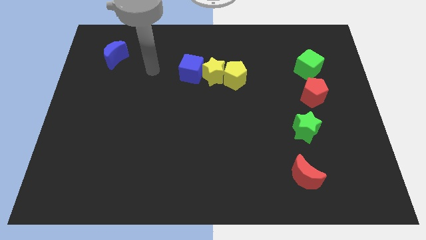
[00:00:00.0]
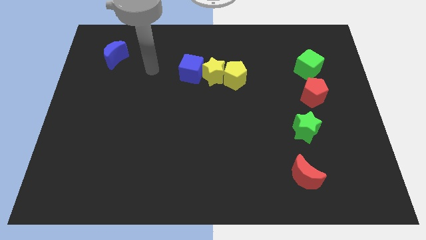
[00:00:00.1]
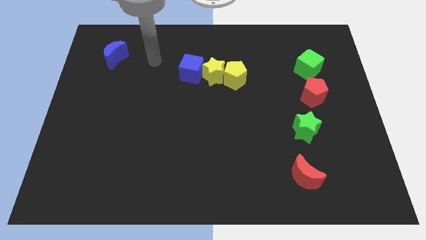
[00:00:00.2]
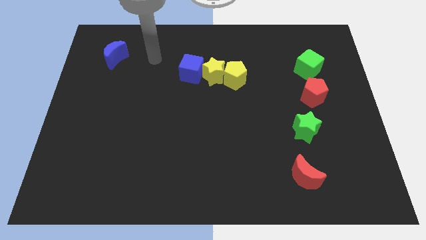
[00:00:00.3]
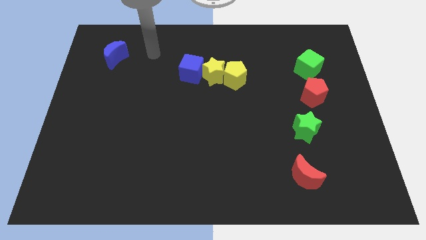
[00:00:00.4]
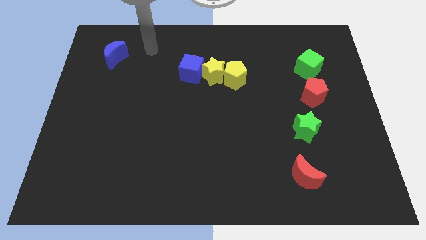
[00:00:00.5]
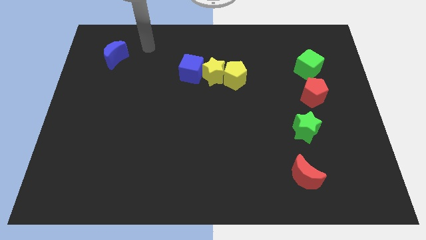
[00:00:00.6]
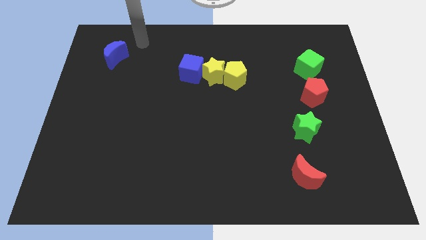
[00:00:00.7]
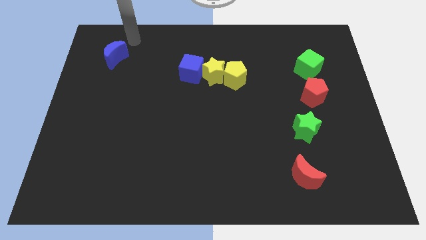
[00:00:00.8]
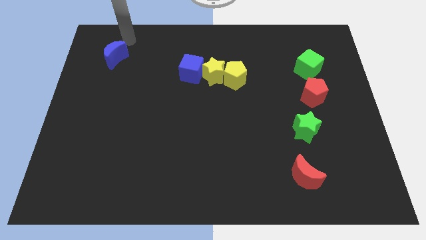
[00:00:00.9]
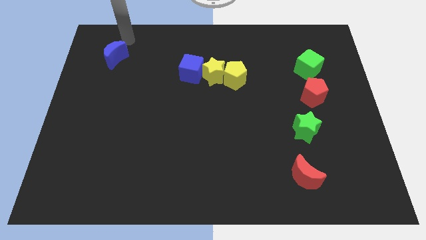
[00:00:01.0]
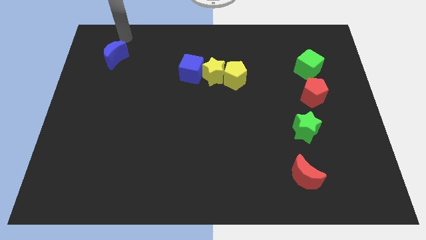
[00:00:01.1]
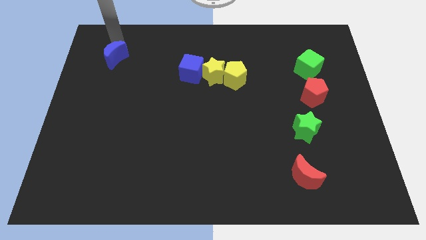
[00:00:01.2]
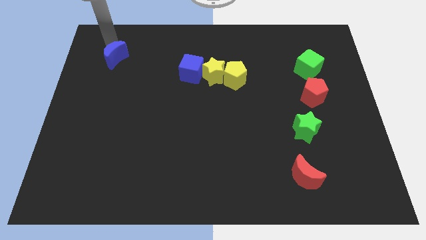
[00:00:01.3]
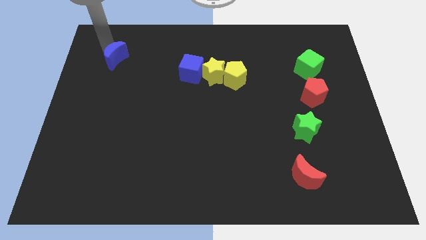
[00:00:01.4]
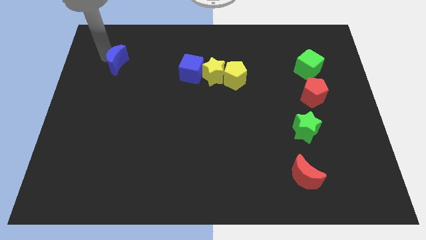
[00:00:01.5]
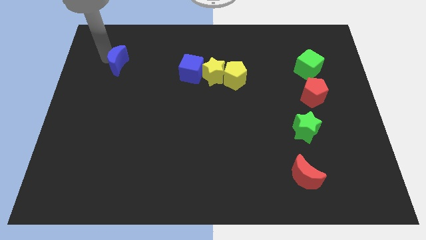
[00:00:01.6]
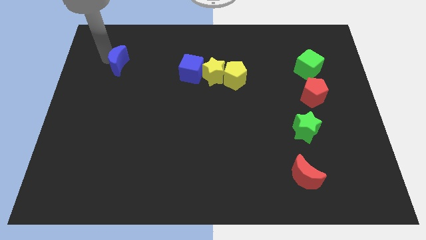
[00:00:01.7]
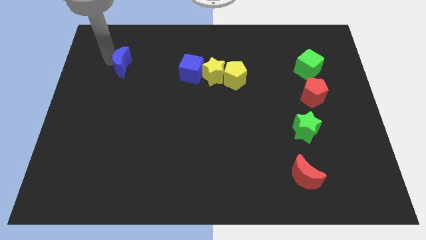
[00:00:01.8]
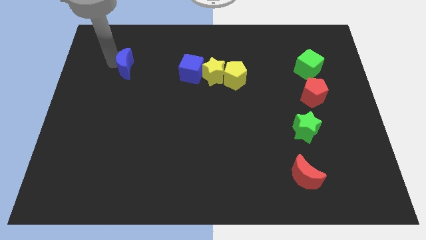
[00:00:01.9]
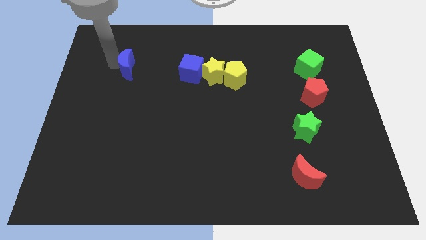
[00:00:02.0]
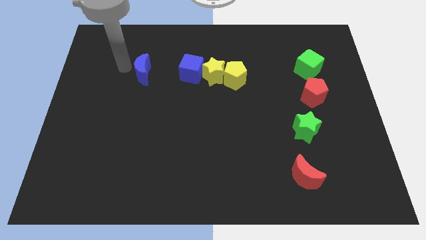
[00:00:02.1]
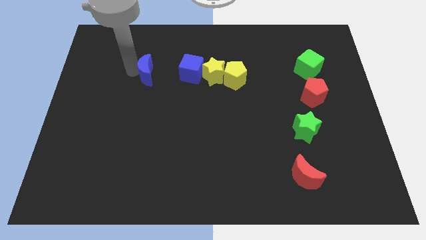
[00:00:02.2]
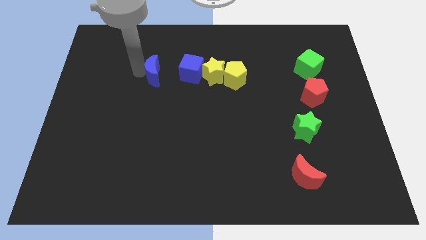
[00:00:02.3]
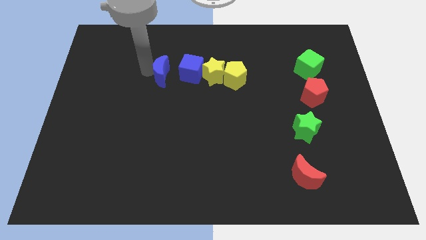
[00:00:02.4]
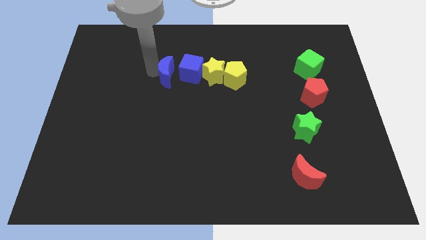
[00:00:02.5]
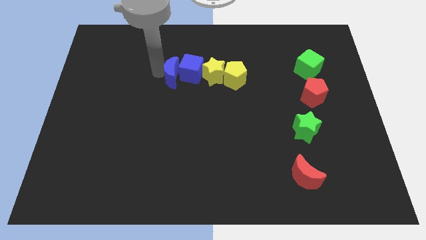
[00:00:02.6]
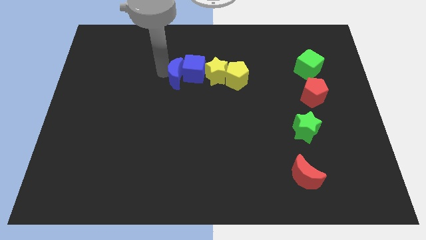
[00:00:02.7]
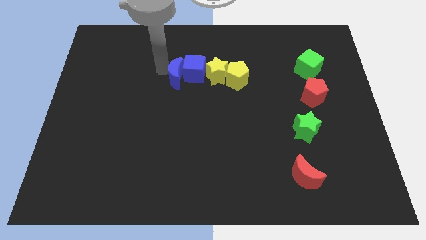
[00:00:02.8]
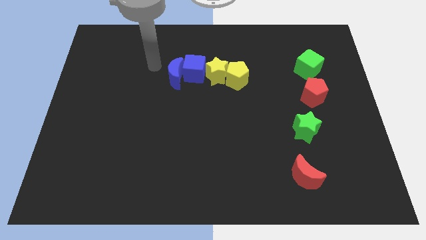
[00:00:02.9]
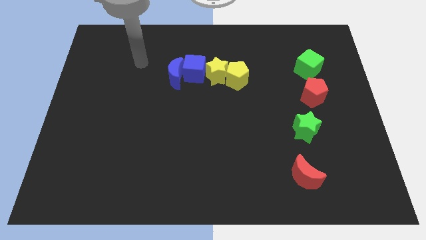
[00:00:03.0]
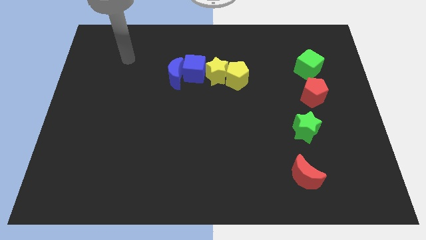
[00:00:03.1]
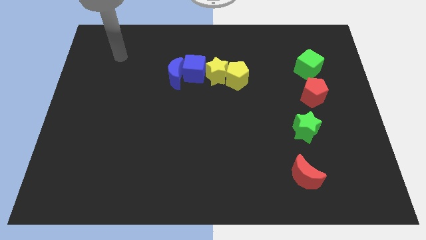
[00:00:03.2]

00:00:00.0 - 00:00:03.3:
move blue moon into blue cube

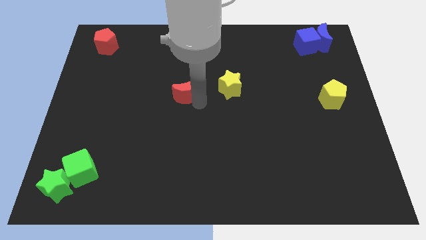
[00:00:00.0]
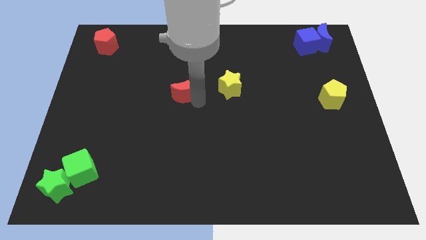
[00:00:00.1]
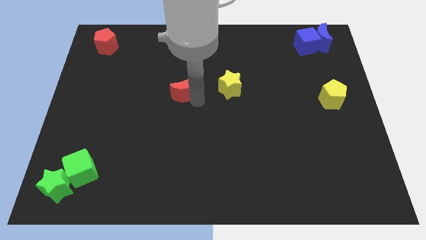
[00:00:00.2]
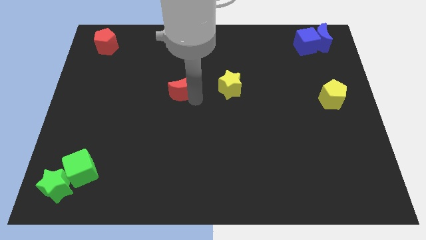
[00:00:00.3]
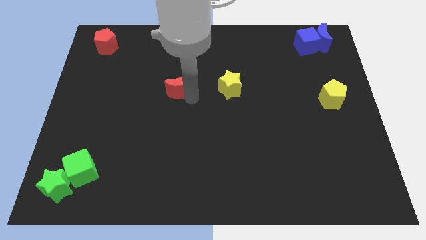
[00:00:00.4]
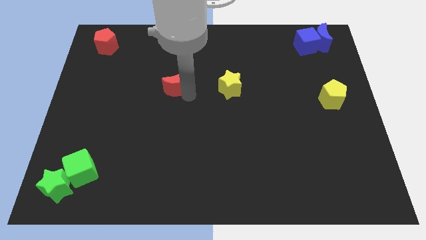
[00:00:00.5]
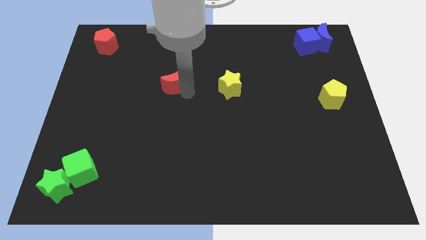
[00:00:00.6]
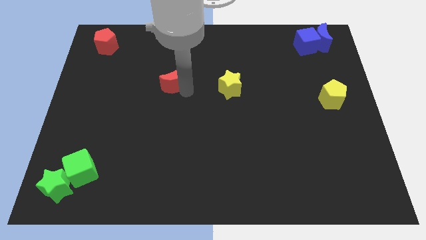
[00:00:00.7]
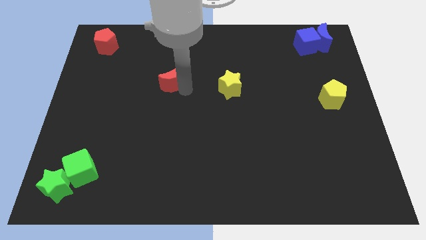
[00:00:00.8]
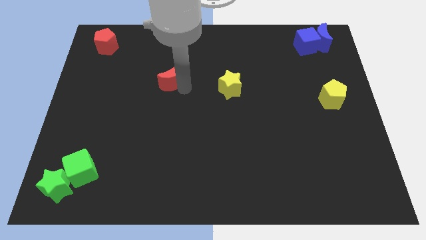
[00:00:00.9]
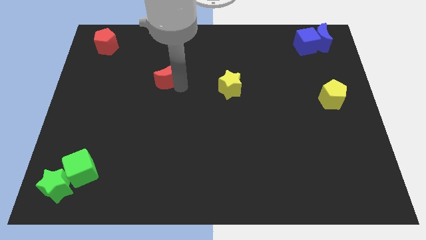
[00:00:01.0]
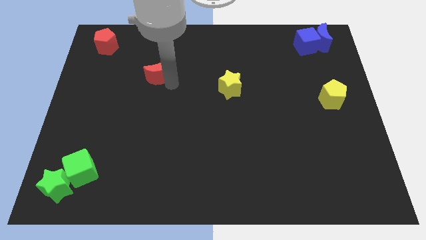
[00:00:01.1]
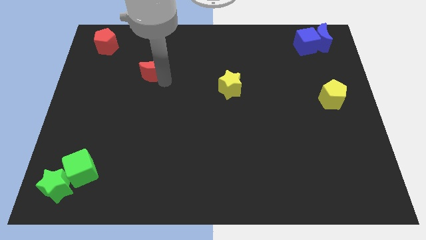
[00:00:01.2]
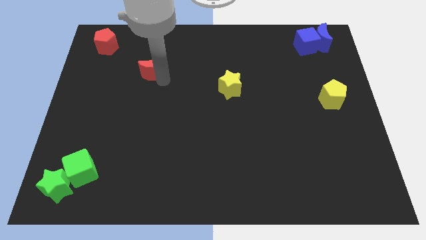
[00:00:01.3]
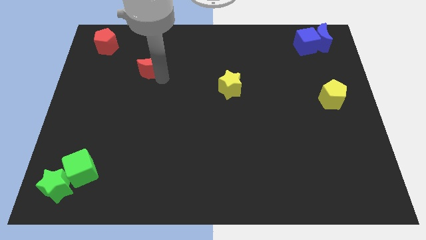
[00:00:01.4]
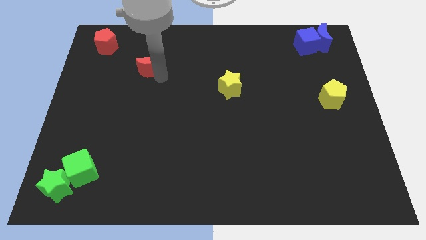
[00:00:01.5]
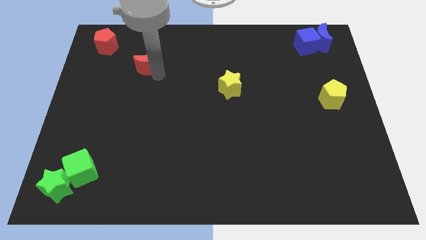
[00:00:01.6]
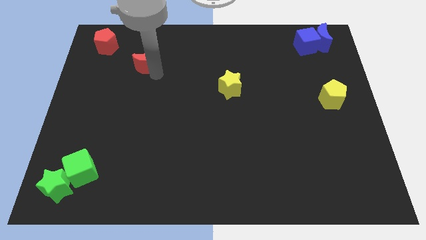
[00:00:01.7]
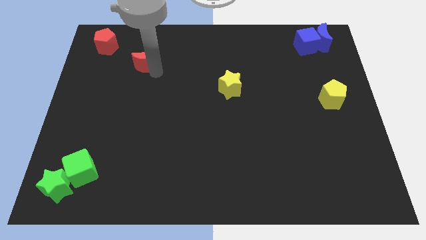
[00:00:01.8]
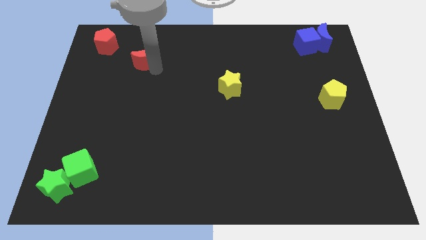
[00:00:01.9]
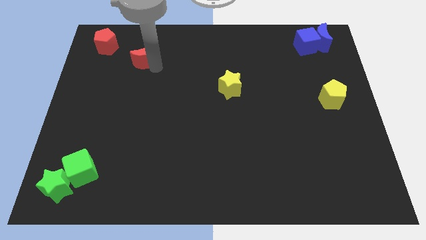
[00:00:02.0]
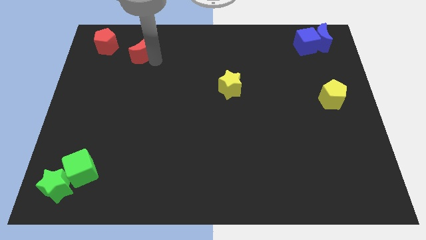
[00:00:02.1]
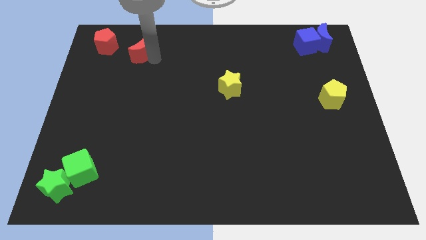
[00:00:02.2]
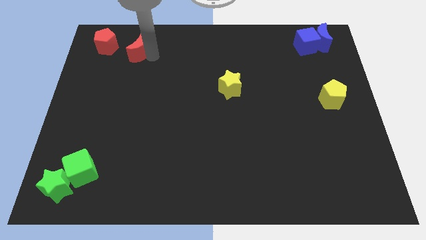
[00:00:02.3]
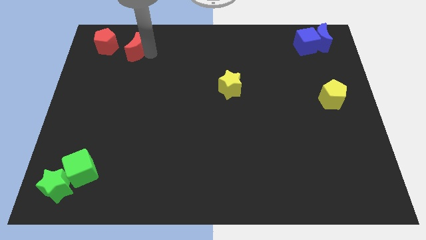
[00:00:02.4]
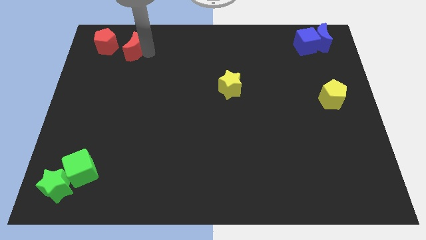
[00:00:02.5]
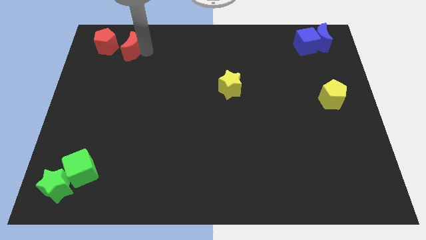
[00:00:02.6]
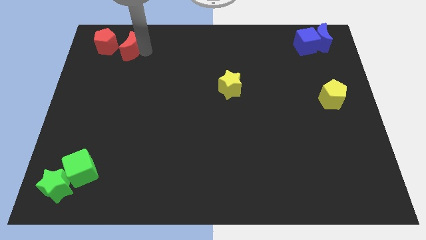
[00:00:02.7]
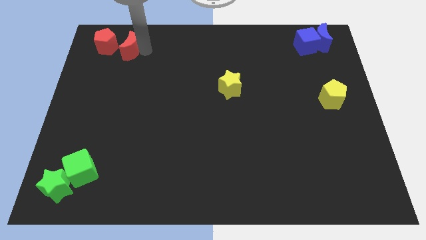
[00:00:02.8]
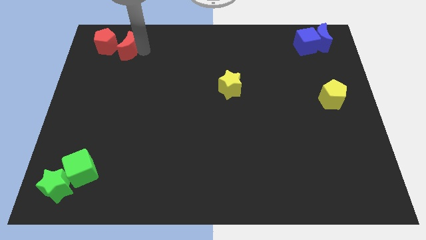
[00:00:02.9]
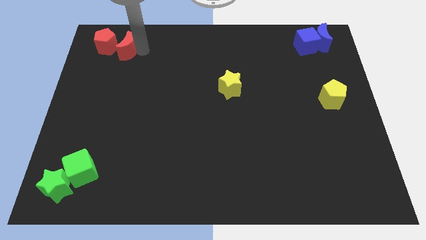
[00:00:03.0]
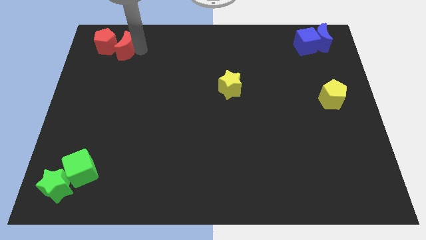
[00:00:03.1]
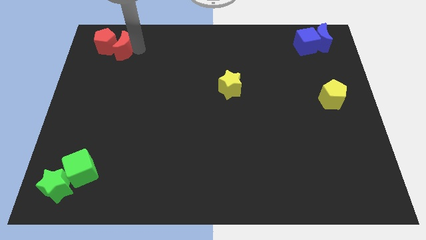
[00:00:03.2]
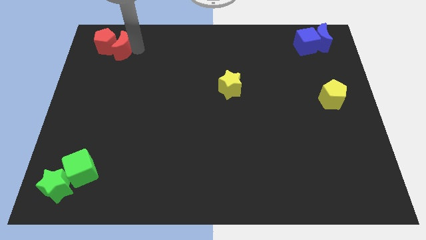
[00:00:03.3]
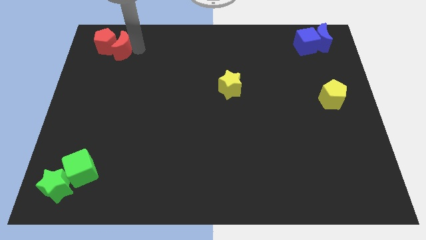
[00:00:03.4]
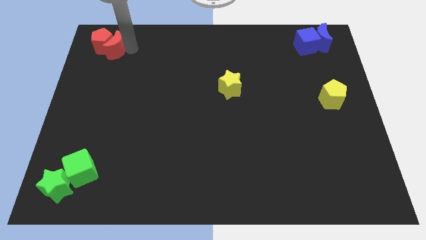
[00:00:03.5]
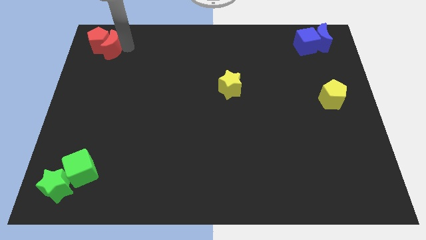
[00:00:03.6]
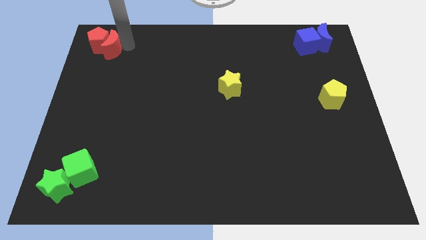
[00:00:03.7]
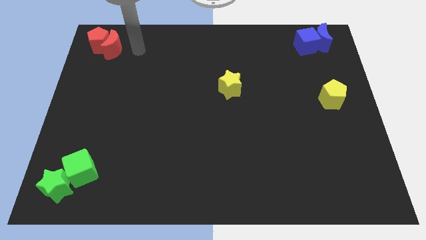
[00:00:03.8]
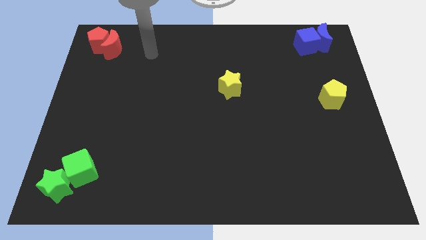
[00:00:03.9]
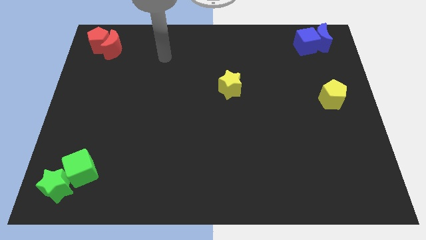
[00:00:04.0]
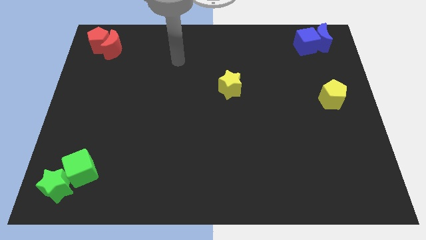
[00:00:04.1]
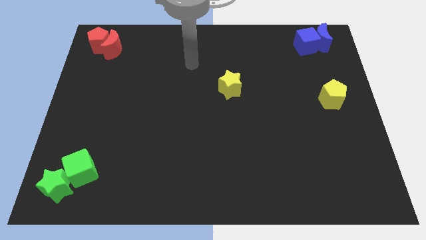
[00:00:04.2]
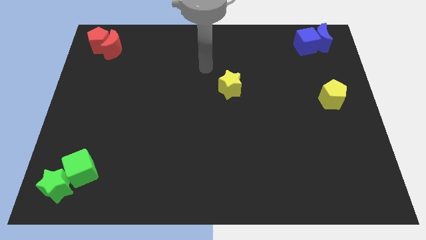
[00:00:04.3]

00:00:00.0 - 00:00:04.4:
move the red crescent to the right of the red pentagon

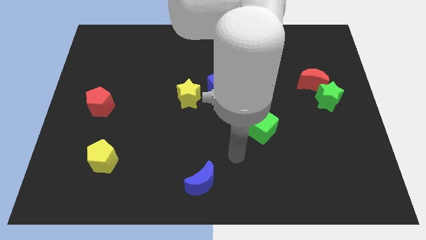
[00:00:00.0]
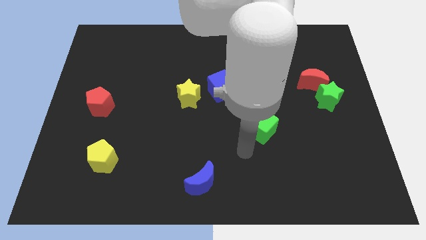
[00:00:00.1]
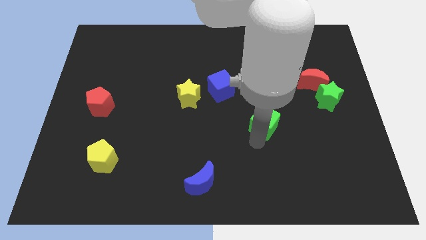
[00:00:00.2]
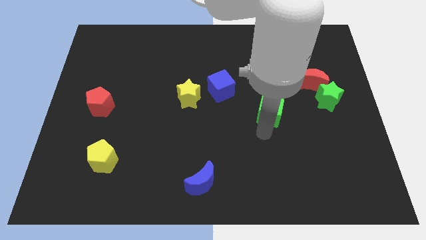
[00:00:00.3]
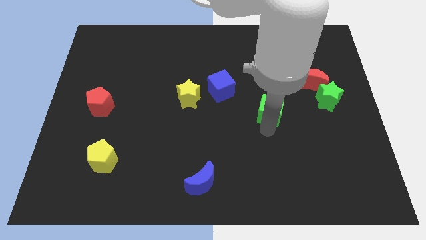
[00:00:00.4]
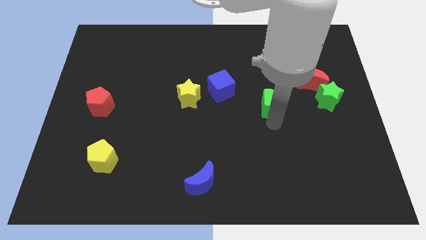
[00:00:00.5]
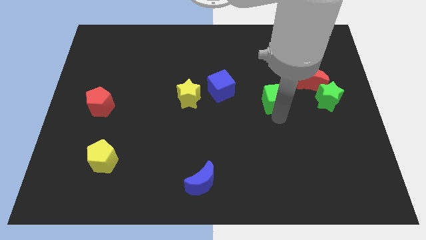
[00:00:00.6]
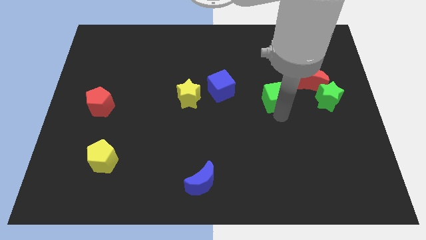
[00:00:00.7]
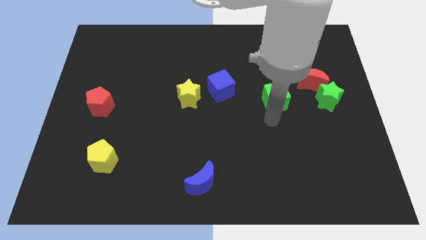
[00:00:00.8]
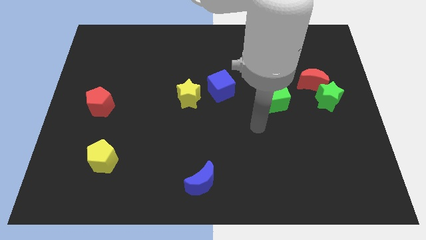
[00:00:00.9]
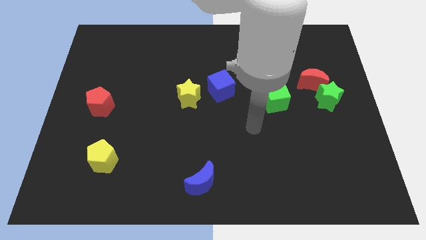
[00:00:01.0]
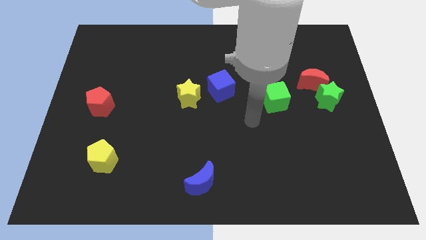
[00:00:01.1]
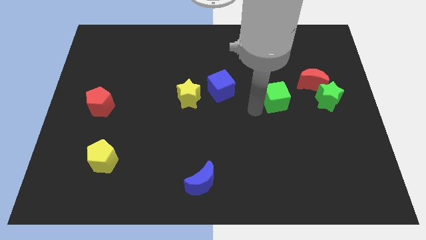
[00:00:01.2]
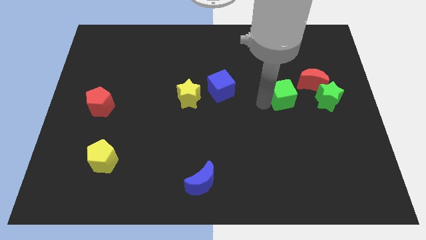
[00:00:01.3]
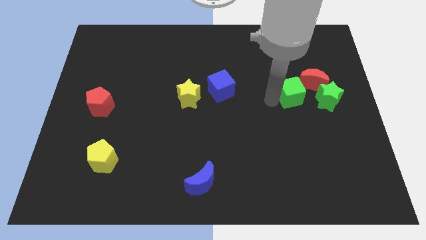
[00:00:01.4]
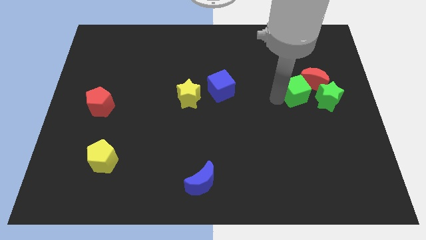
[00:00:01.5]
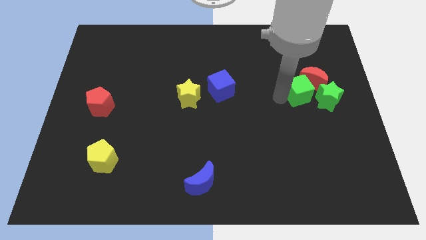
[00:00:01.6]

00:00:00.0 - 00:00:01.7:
push the green cube towards the red crescent
